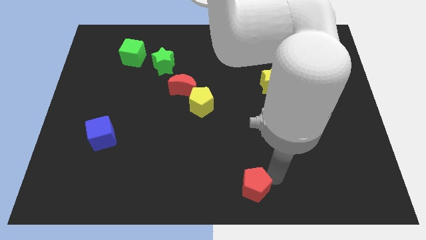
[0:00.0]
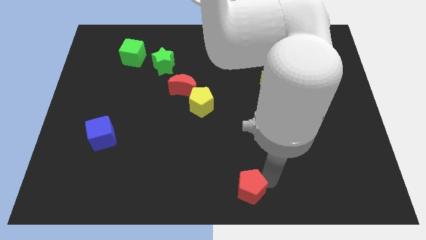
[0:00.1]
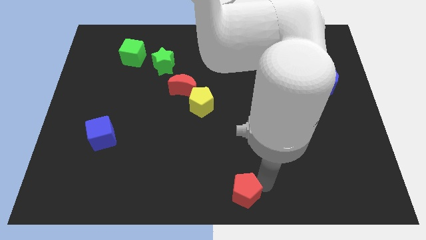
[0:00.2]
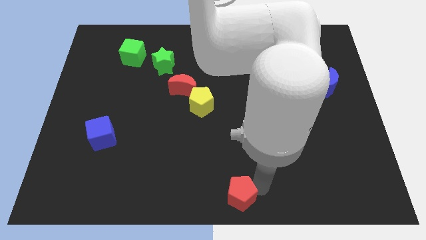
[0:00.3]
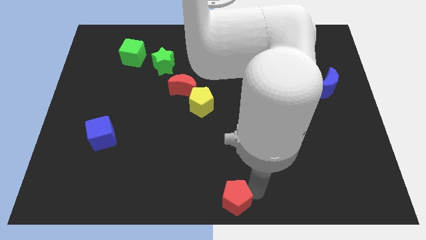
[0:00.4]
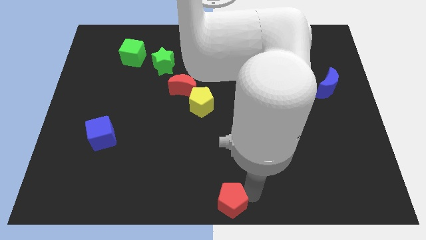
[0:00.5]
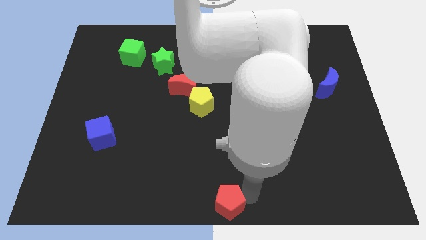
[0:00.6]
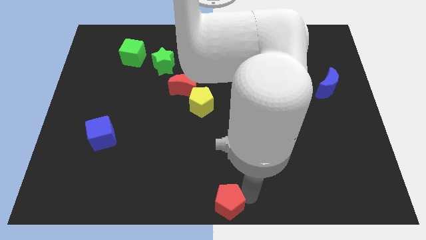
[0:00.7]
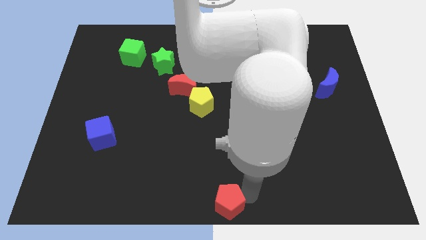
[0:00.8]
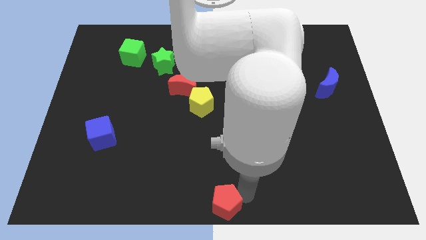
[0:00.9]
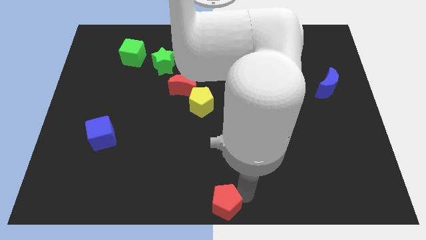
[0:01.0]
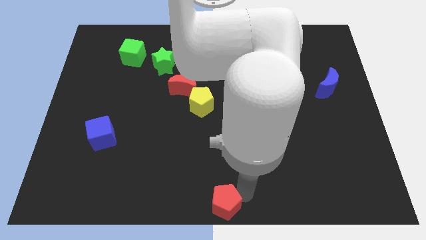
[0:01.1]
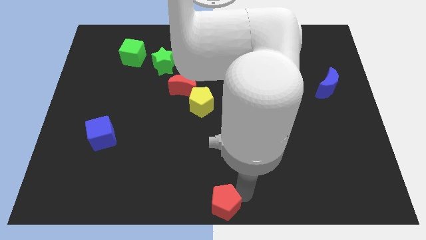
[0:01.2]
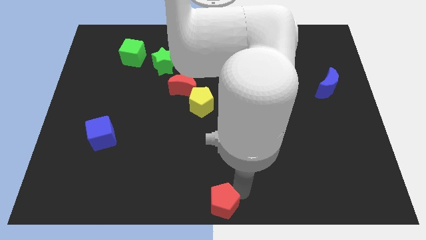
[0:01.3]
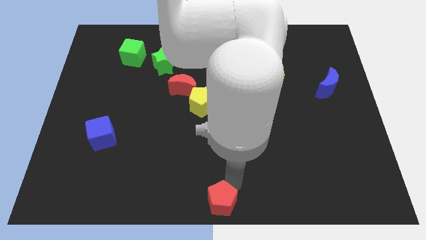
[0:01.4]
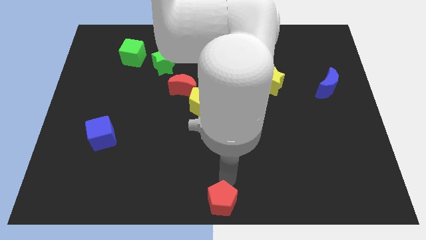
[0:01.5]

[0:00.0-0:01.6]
move the red pentagon to the bottom center of the board

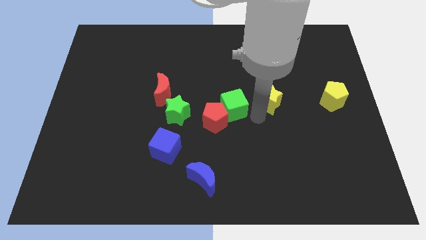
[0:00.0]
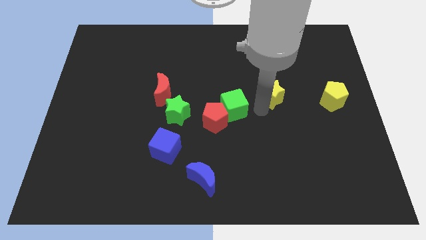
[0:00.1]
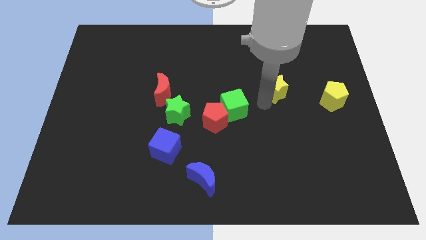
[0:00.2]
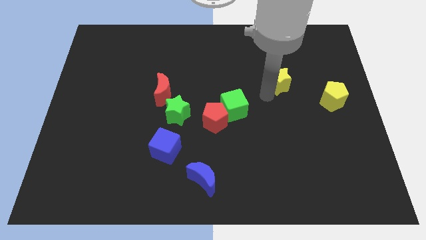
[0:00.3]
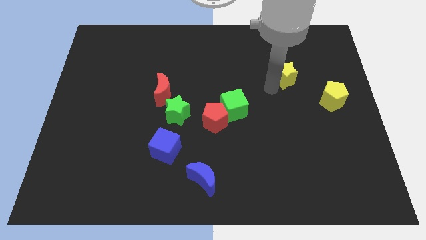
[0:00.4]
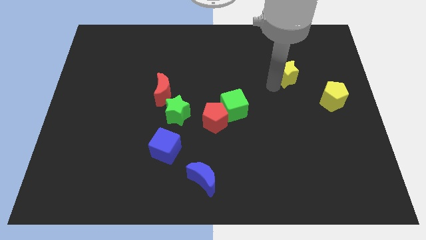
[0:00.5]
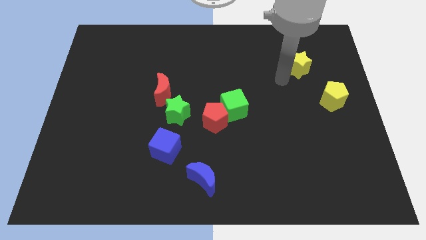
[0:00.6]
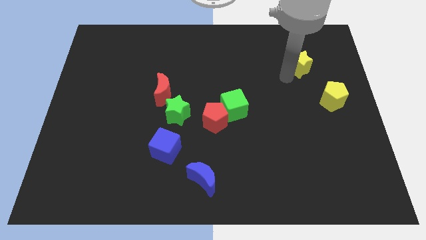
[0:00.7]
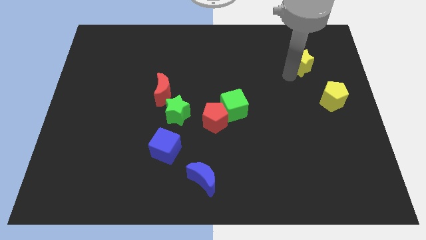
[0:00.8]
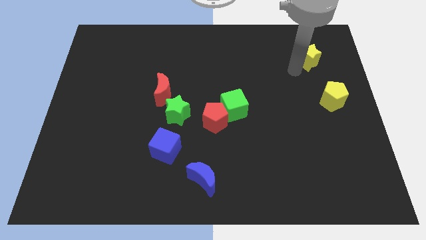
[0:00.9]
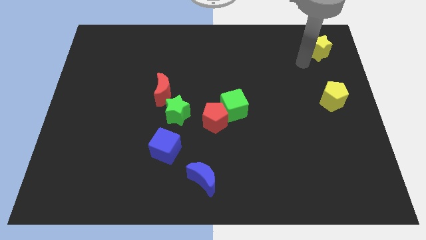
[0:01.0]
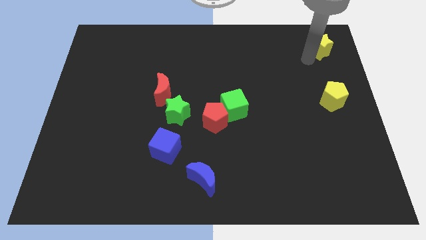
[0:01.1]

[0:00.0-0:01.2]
place the yellow star above the yellow pentagon

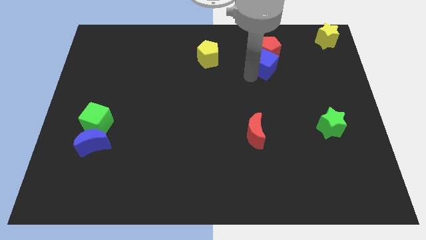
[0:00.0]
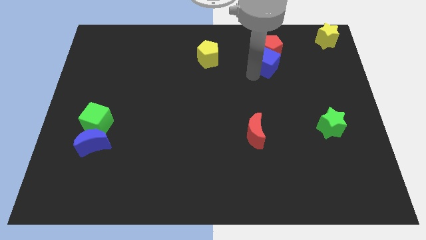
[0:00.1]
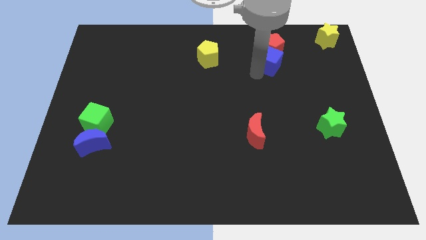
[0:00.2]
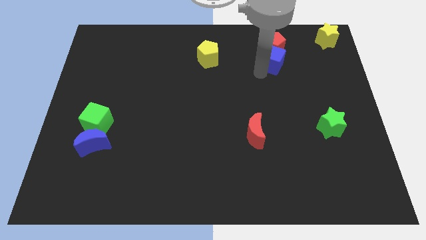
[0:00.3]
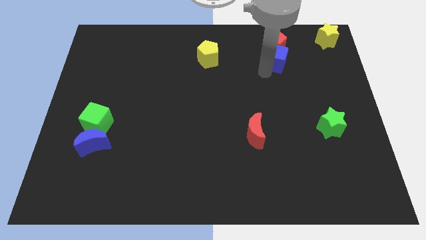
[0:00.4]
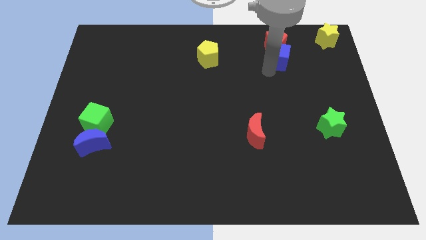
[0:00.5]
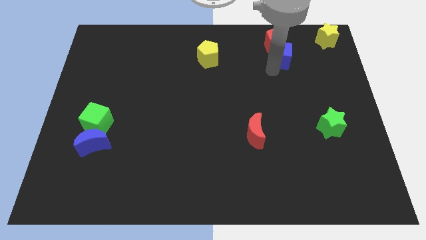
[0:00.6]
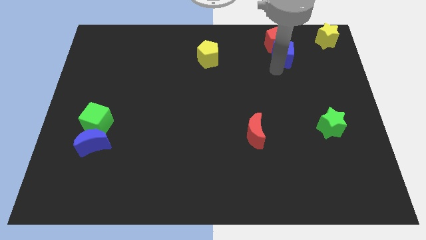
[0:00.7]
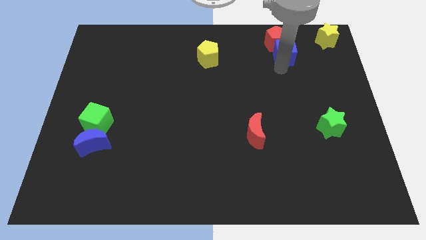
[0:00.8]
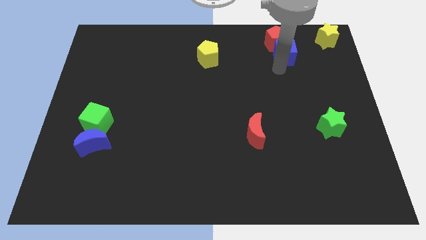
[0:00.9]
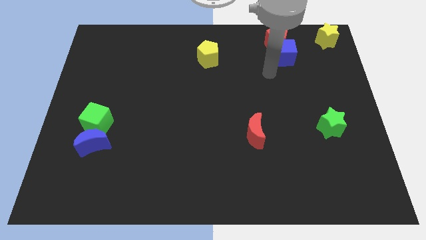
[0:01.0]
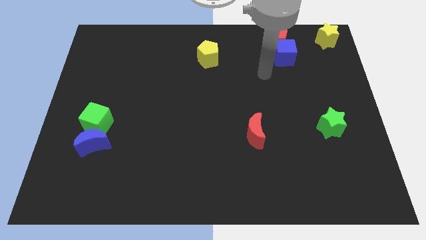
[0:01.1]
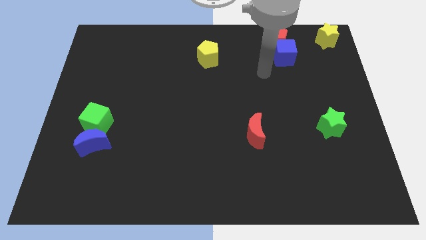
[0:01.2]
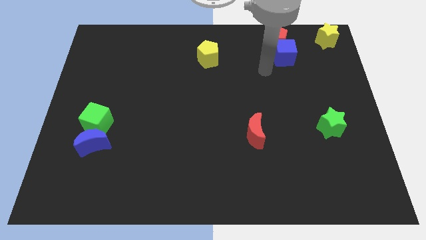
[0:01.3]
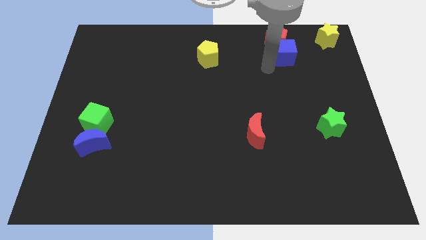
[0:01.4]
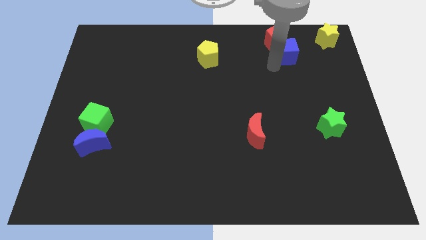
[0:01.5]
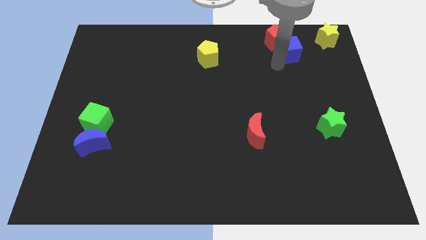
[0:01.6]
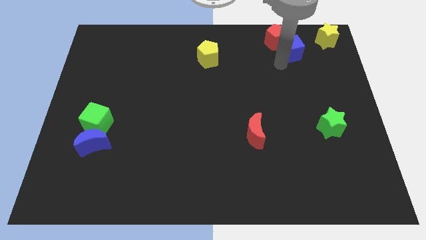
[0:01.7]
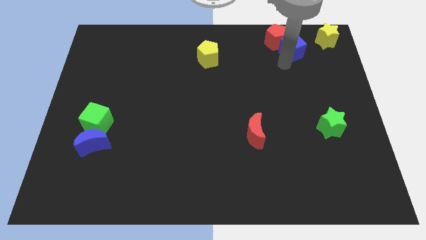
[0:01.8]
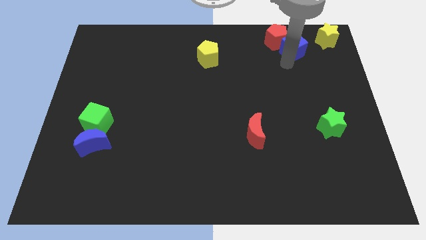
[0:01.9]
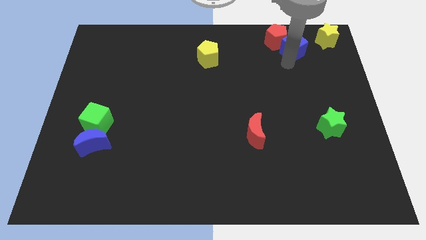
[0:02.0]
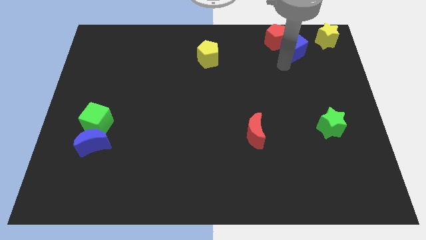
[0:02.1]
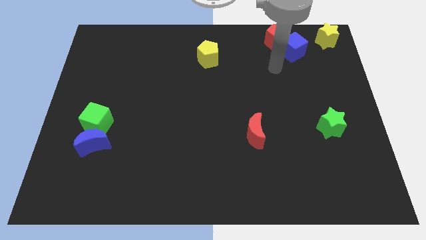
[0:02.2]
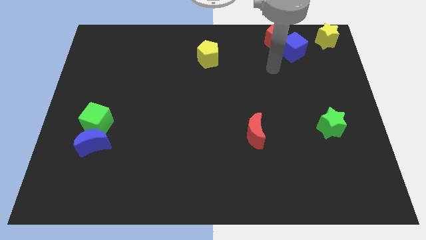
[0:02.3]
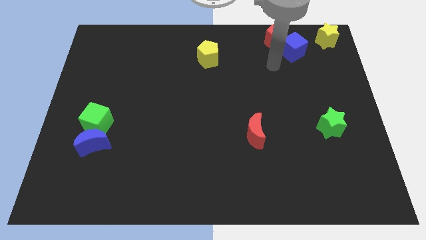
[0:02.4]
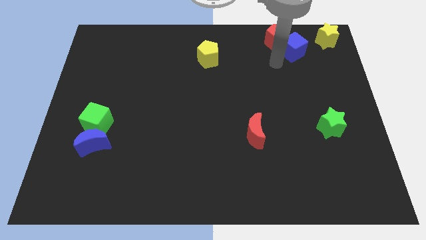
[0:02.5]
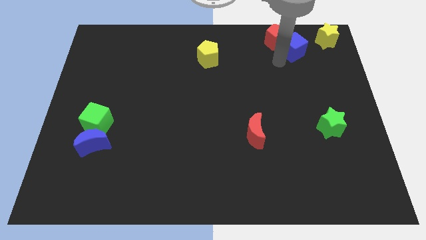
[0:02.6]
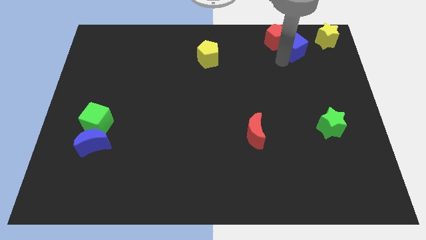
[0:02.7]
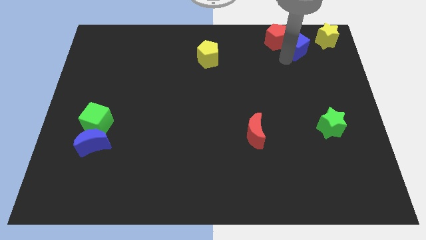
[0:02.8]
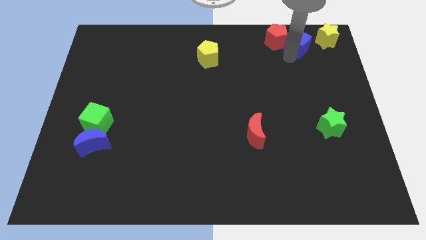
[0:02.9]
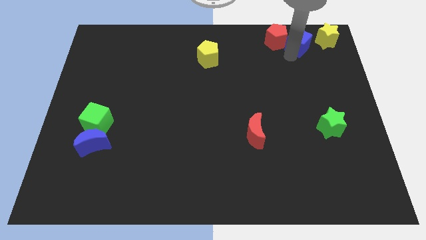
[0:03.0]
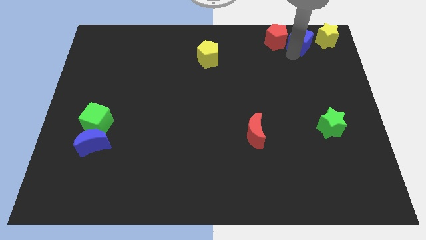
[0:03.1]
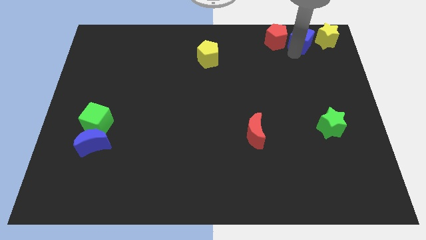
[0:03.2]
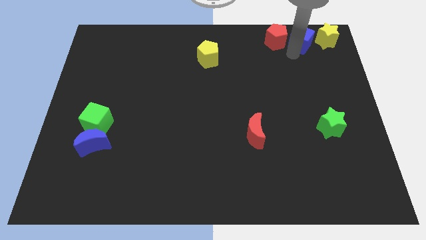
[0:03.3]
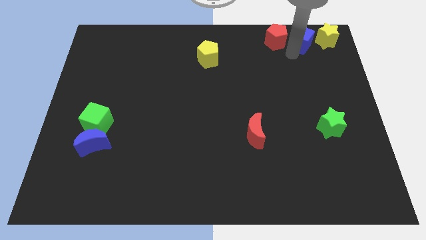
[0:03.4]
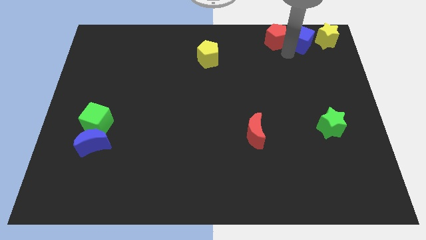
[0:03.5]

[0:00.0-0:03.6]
place the blue cube between the red pentagon and yellow star

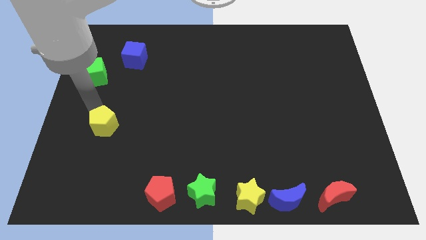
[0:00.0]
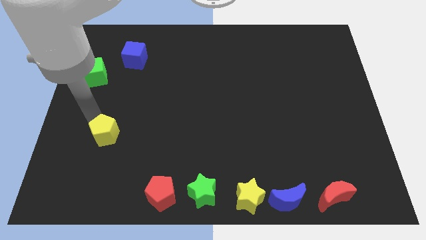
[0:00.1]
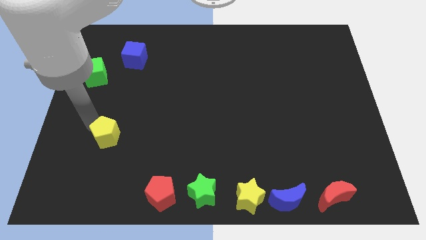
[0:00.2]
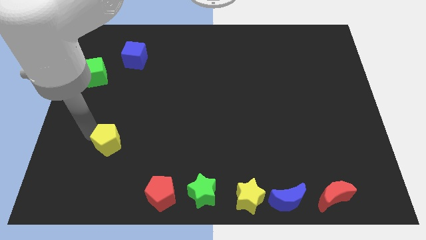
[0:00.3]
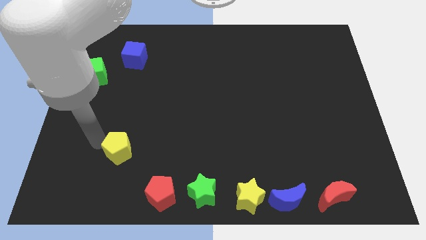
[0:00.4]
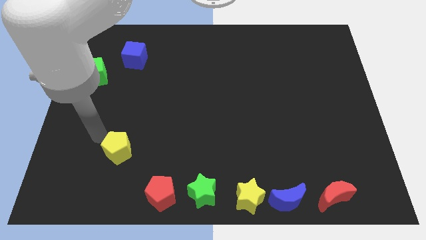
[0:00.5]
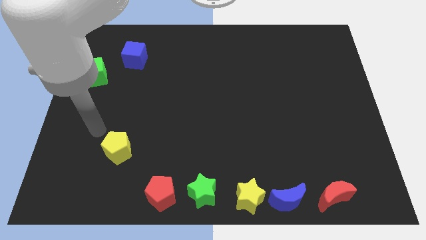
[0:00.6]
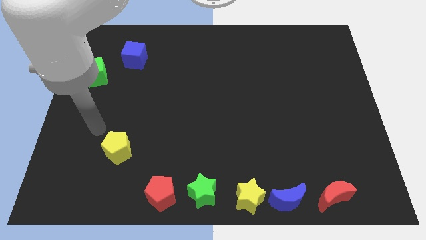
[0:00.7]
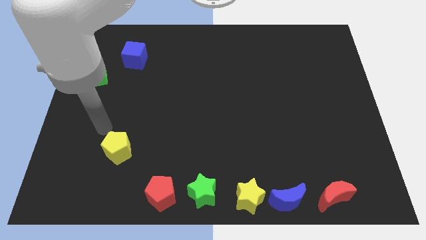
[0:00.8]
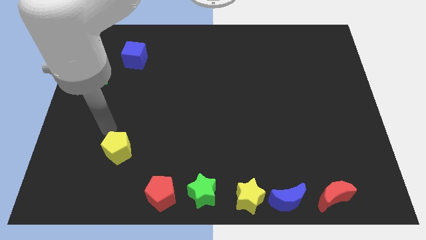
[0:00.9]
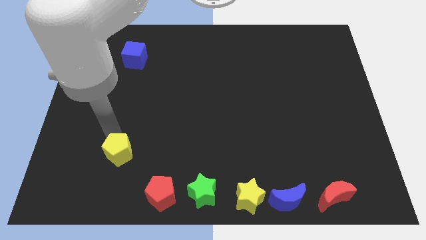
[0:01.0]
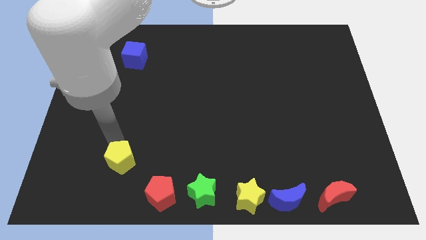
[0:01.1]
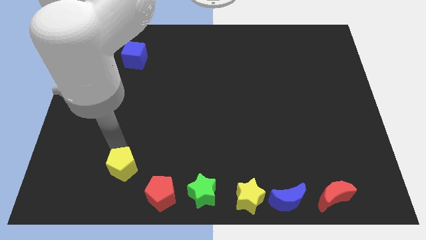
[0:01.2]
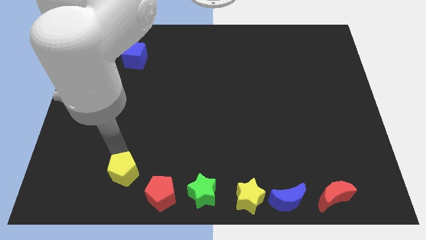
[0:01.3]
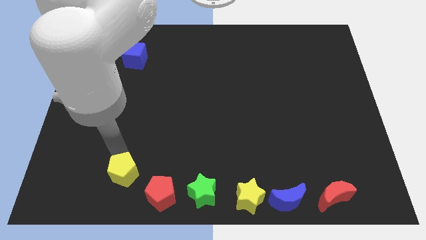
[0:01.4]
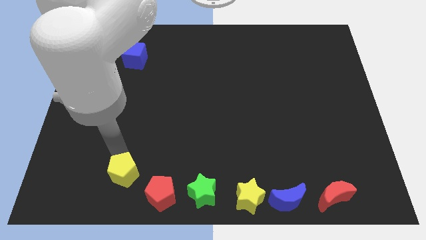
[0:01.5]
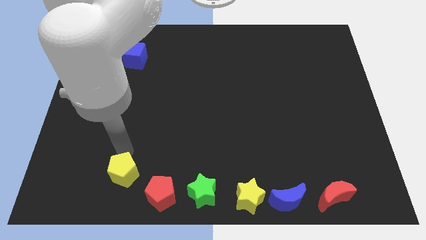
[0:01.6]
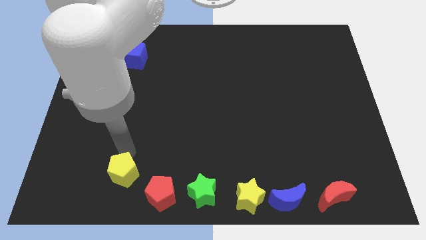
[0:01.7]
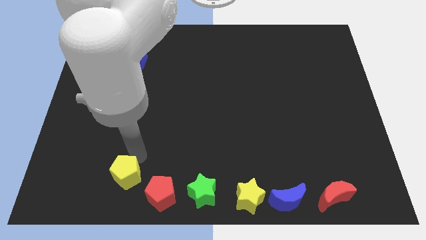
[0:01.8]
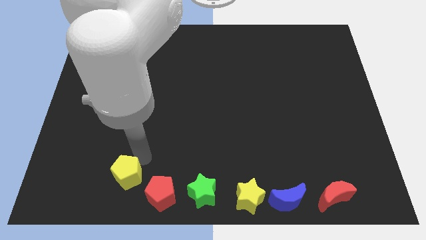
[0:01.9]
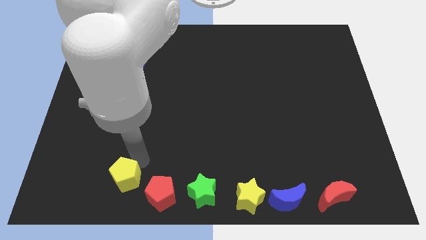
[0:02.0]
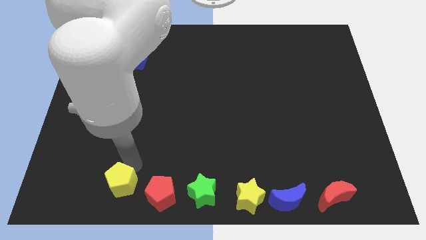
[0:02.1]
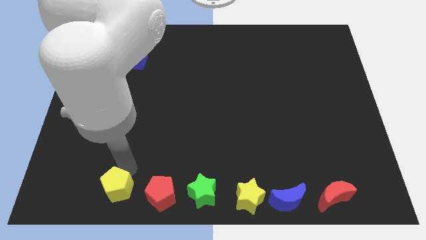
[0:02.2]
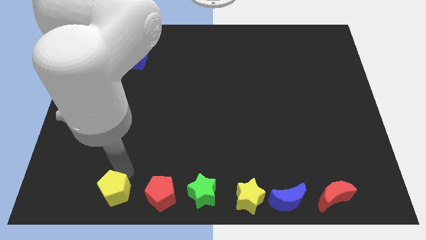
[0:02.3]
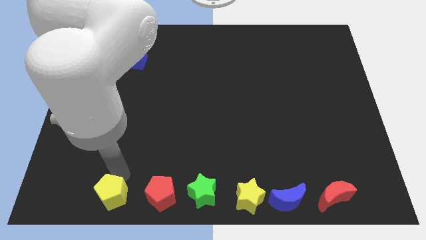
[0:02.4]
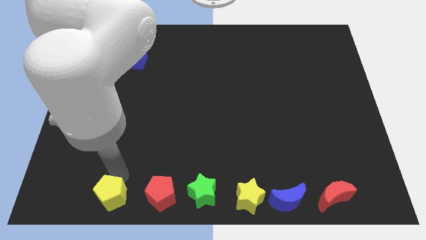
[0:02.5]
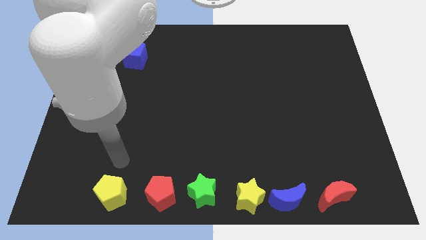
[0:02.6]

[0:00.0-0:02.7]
place the yellow pentagon at left side of the red pentagon
